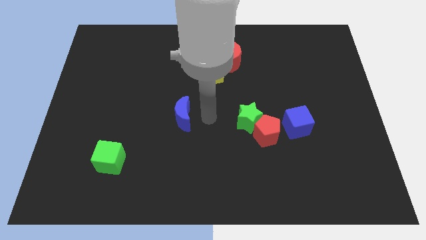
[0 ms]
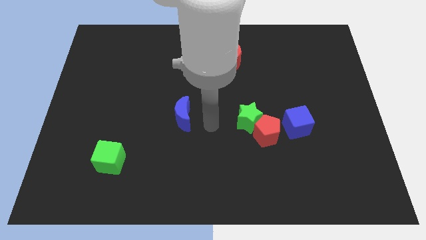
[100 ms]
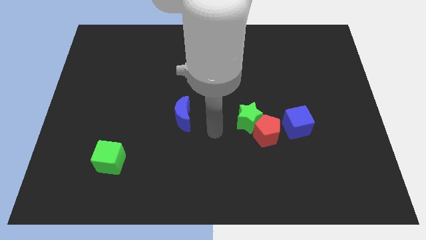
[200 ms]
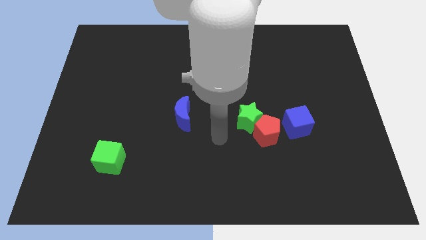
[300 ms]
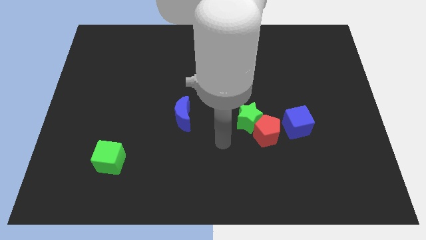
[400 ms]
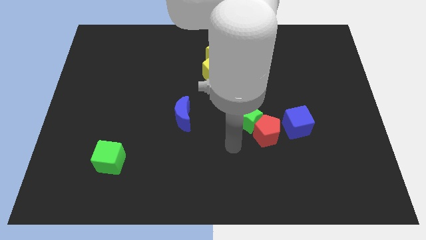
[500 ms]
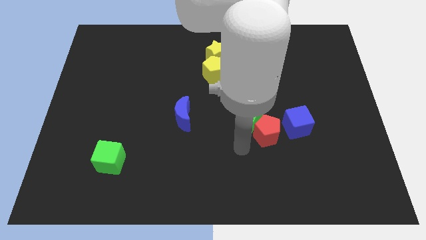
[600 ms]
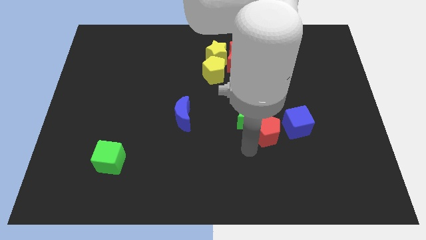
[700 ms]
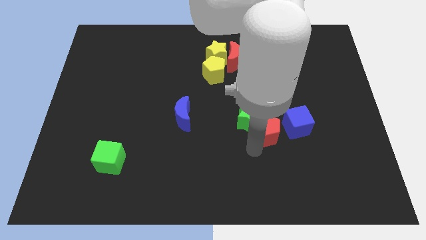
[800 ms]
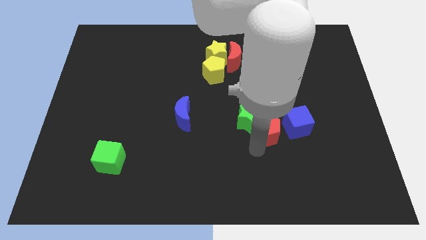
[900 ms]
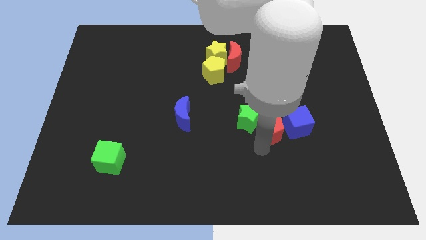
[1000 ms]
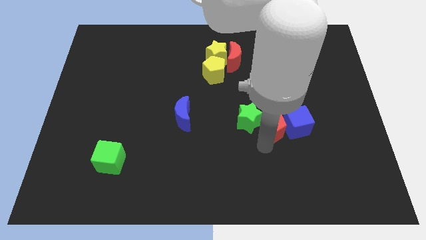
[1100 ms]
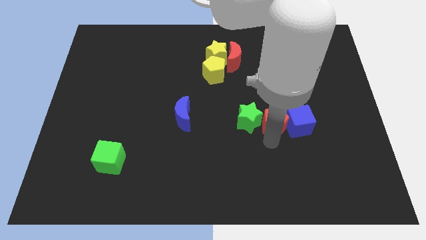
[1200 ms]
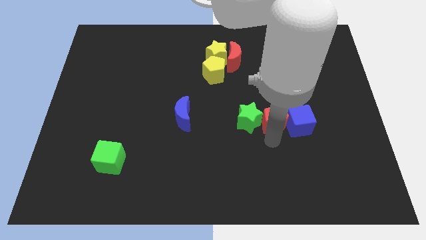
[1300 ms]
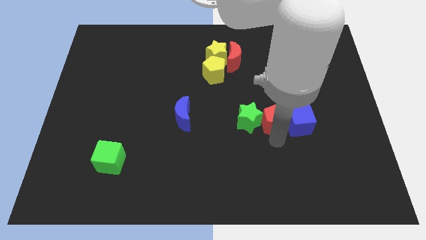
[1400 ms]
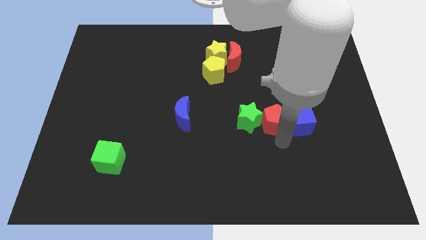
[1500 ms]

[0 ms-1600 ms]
place the red pentagon in between the green star and blue cube

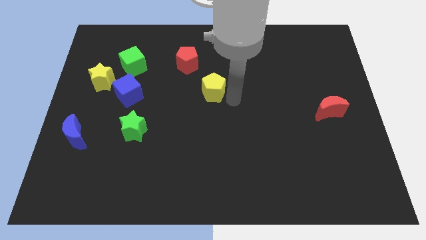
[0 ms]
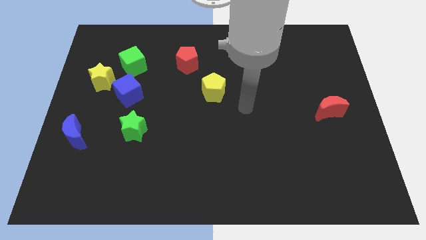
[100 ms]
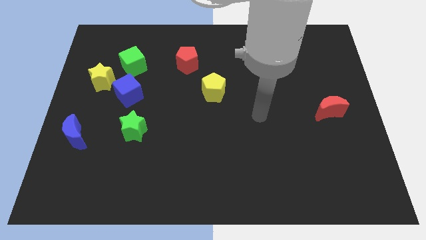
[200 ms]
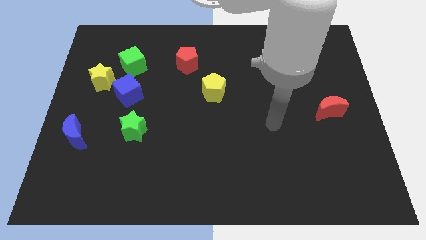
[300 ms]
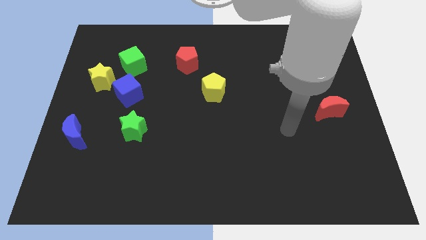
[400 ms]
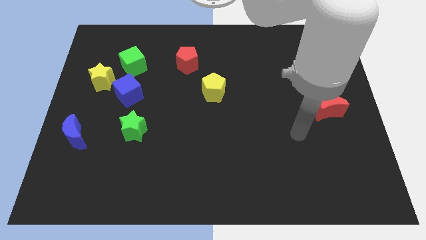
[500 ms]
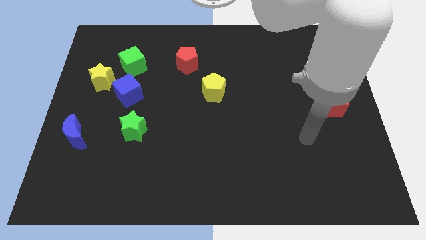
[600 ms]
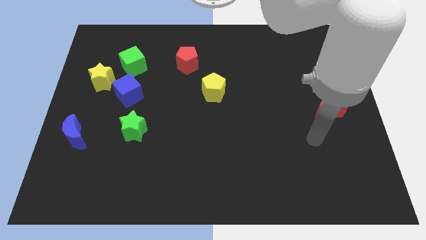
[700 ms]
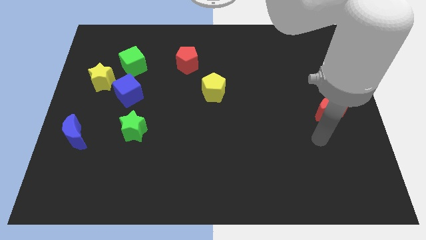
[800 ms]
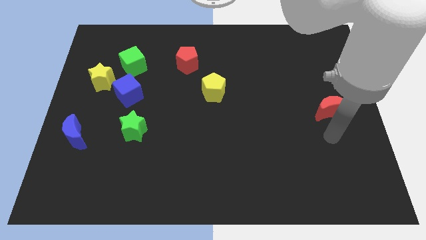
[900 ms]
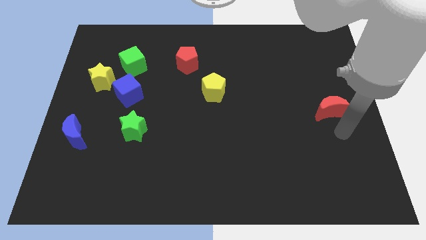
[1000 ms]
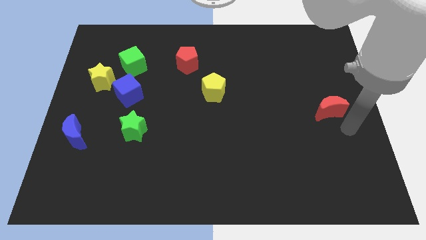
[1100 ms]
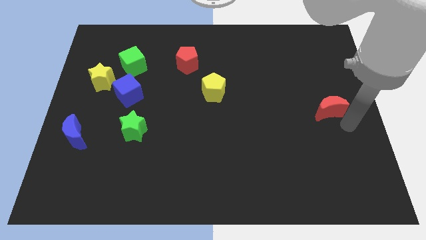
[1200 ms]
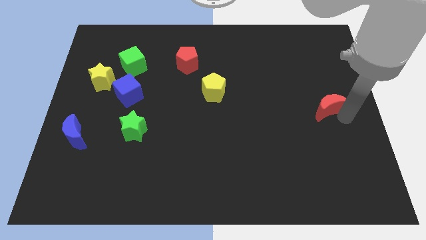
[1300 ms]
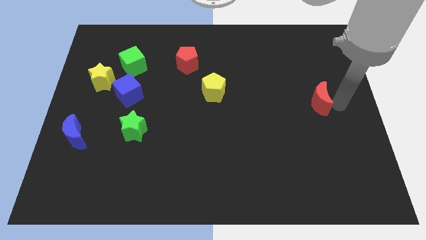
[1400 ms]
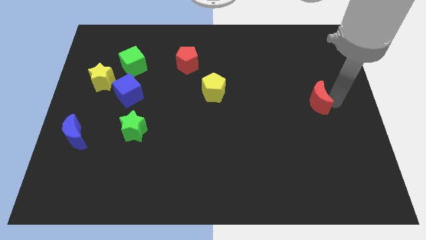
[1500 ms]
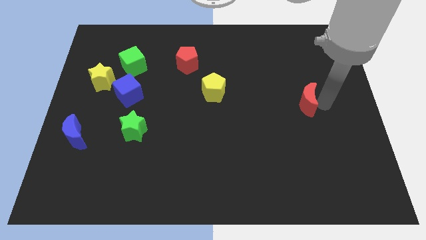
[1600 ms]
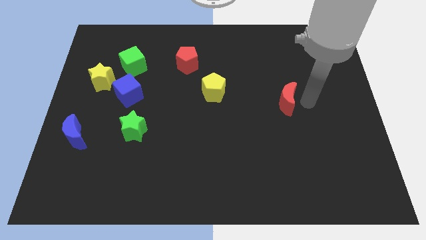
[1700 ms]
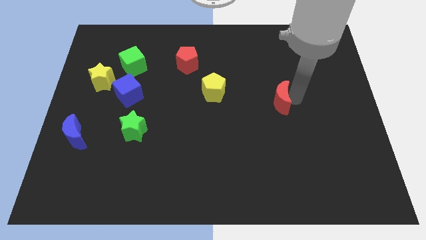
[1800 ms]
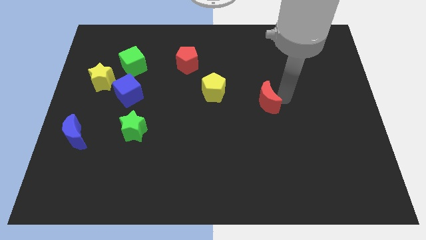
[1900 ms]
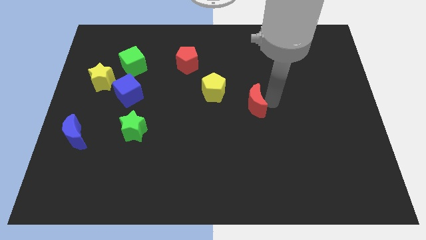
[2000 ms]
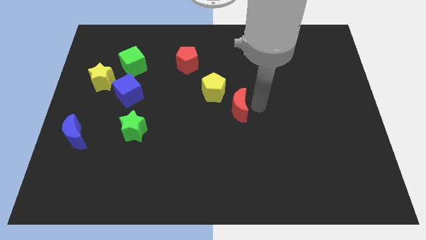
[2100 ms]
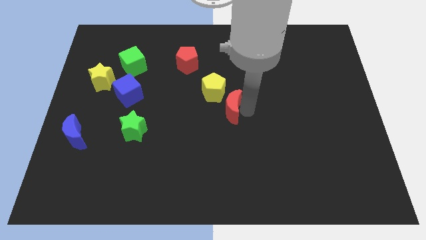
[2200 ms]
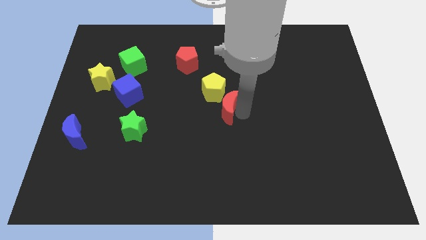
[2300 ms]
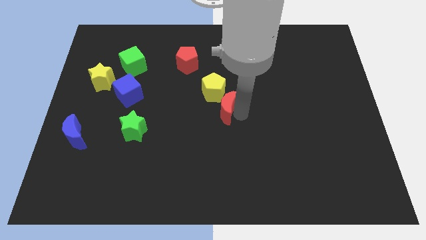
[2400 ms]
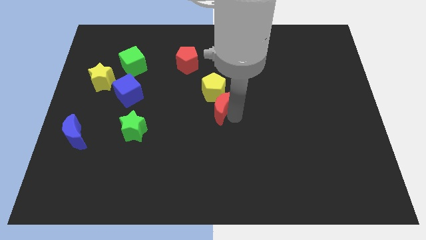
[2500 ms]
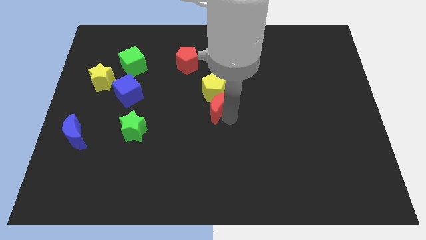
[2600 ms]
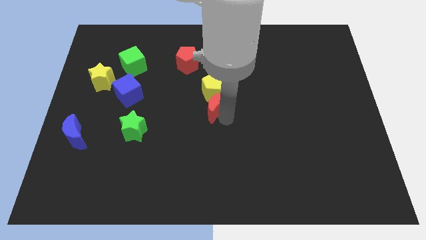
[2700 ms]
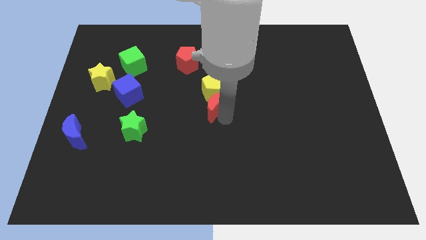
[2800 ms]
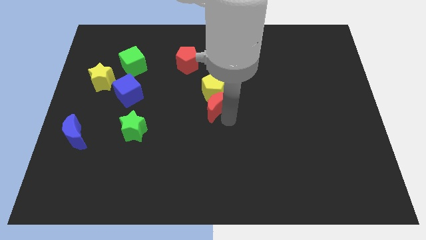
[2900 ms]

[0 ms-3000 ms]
push the red crescent below the yellow pentagon

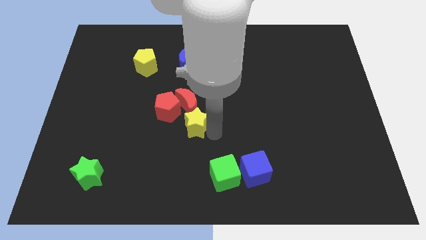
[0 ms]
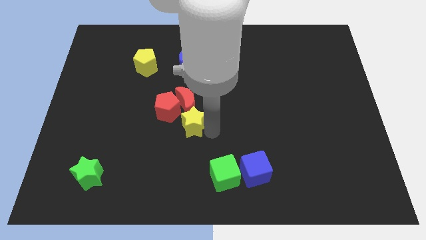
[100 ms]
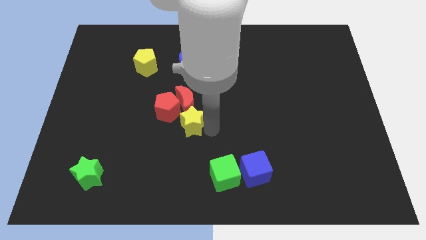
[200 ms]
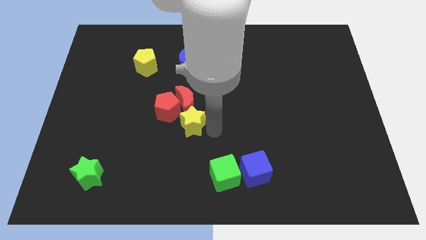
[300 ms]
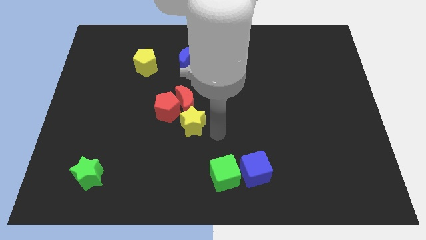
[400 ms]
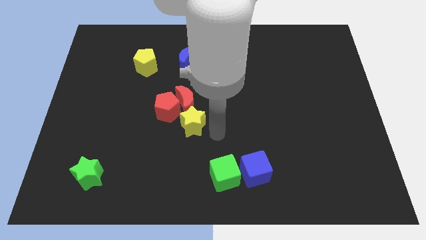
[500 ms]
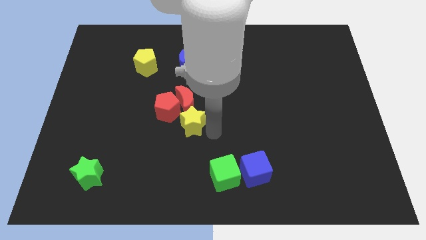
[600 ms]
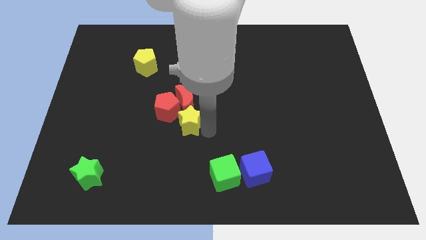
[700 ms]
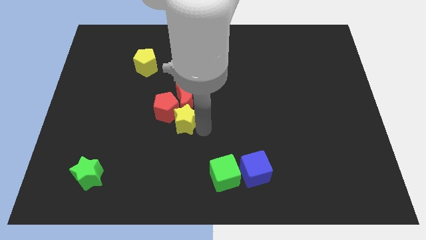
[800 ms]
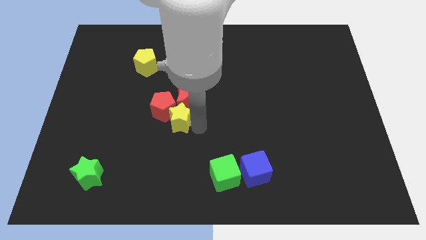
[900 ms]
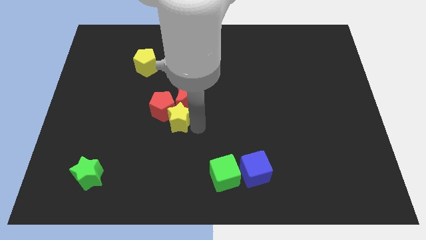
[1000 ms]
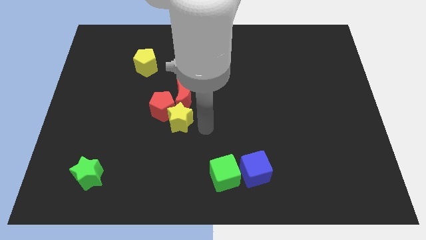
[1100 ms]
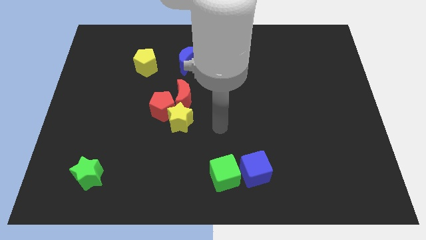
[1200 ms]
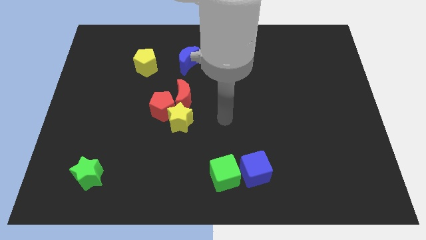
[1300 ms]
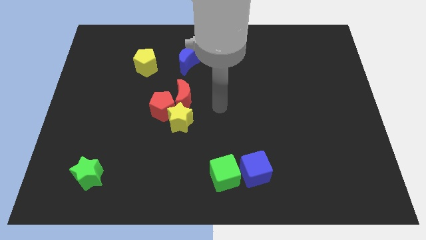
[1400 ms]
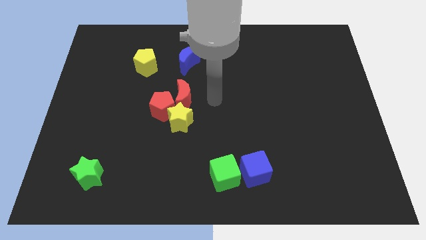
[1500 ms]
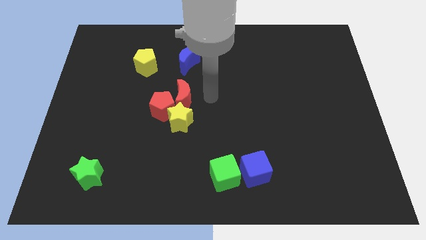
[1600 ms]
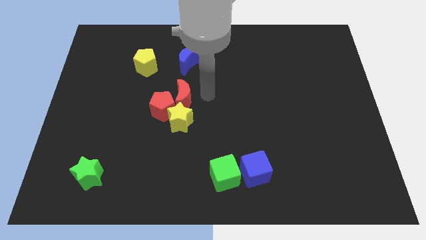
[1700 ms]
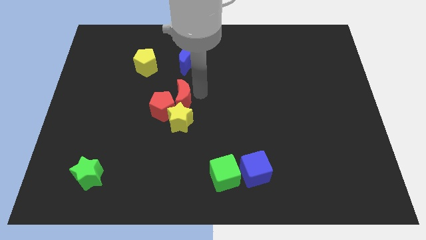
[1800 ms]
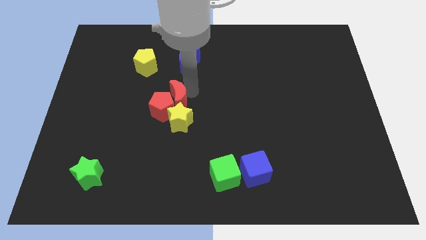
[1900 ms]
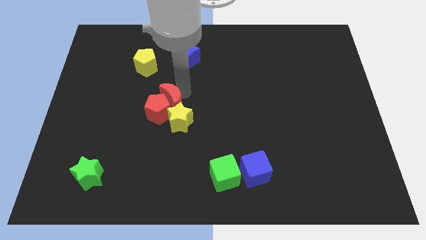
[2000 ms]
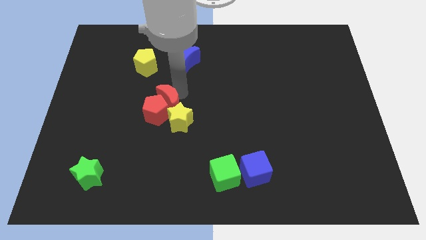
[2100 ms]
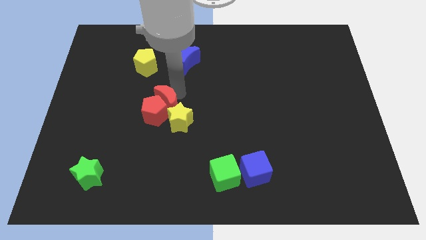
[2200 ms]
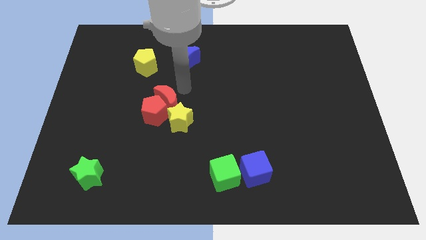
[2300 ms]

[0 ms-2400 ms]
place red crescent below yellow pentagon

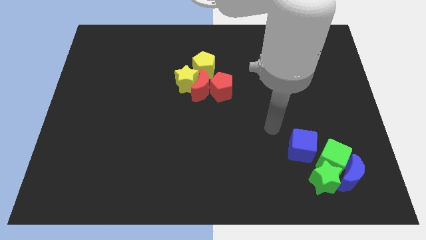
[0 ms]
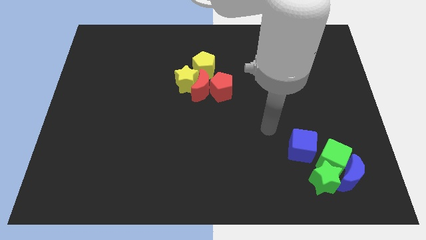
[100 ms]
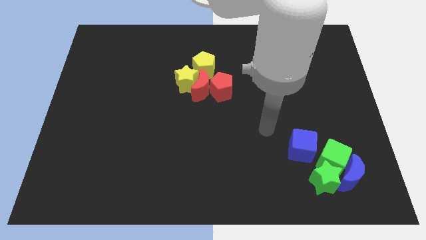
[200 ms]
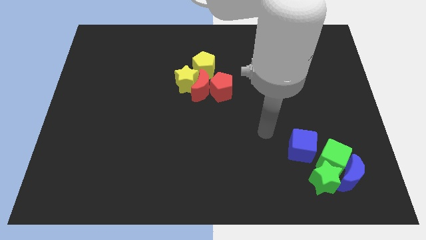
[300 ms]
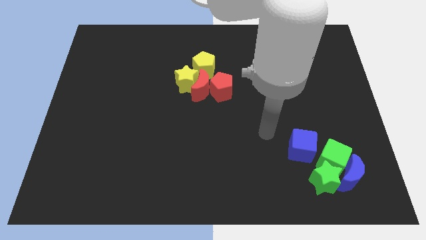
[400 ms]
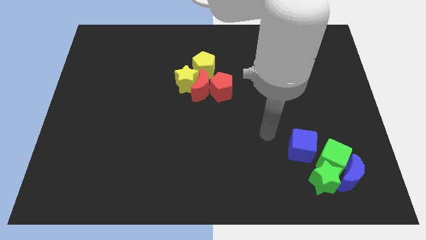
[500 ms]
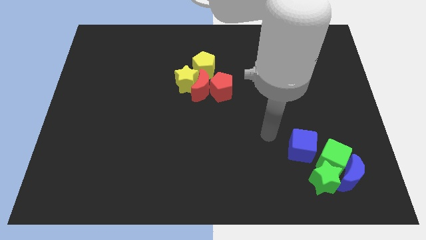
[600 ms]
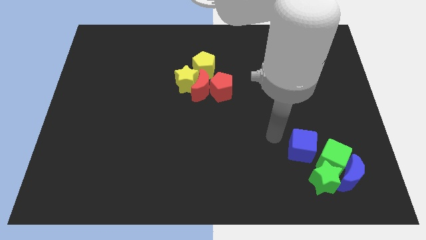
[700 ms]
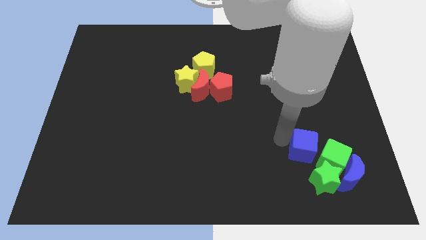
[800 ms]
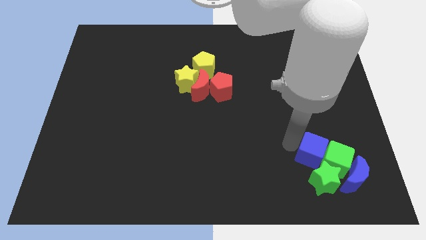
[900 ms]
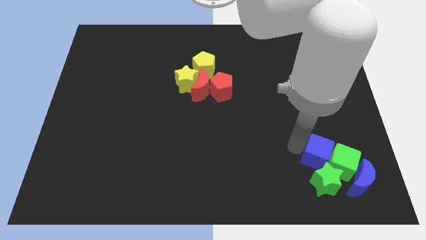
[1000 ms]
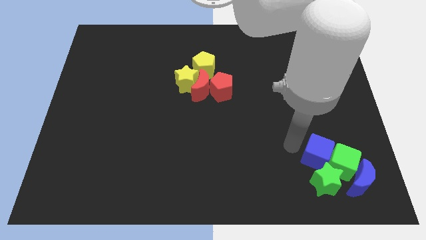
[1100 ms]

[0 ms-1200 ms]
push the blue cube into the green cube

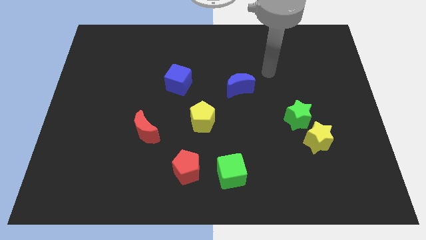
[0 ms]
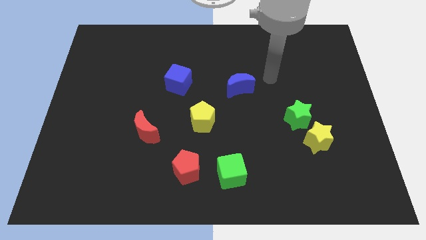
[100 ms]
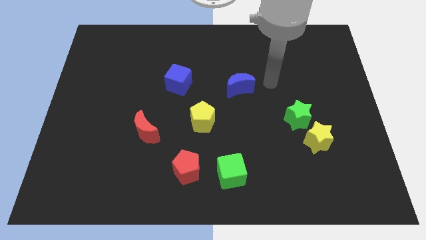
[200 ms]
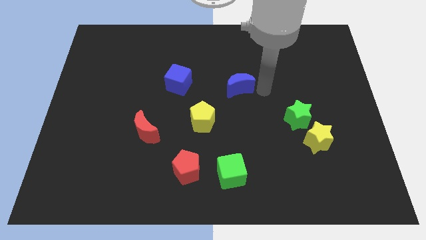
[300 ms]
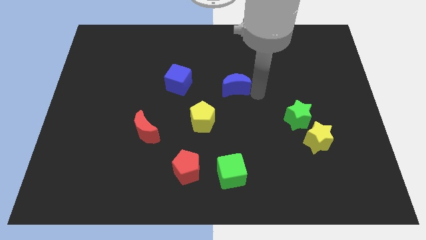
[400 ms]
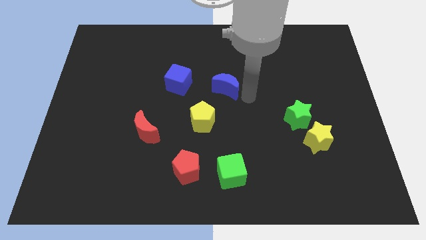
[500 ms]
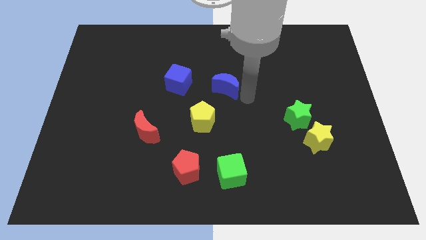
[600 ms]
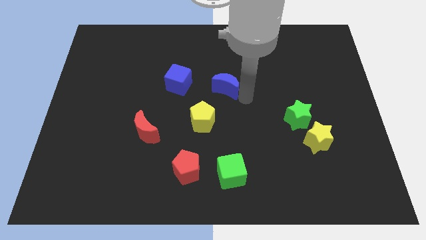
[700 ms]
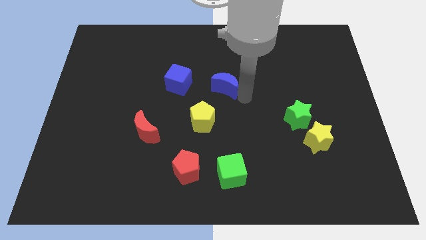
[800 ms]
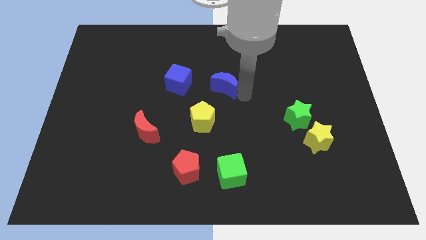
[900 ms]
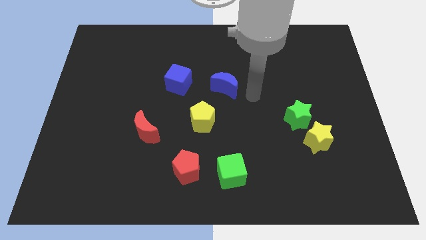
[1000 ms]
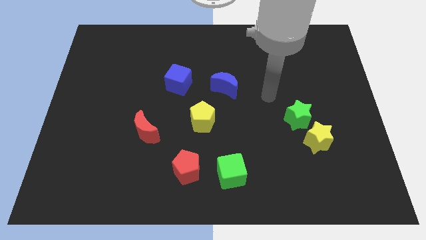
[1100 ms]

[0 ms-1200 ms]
slightly push blue moon parallel to the top right to blue cube
